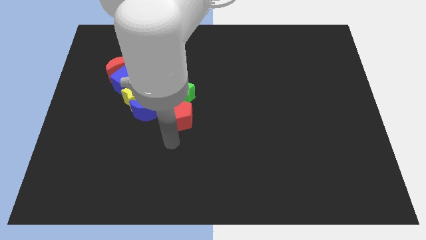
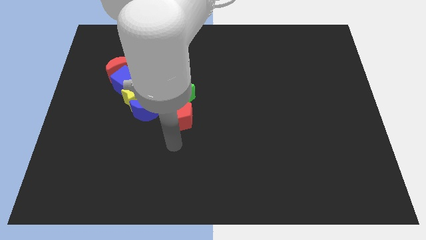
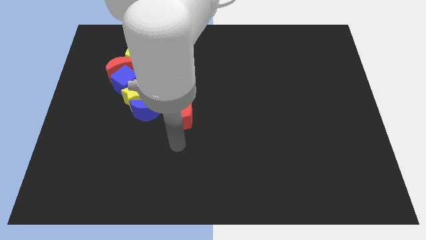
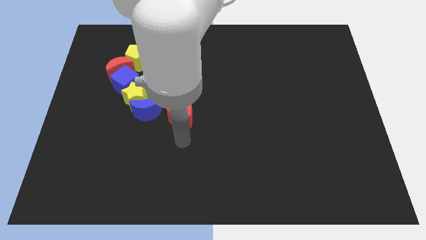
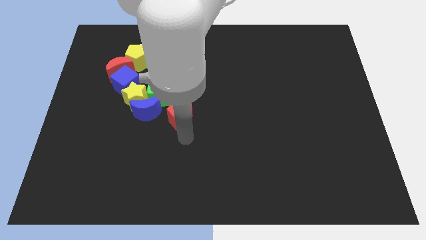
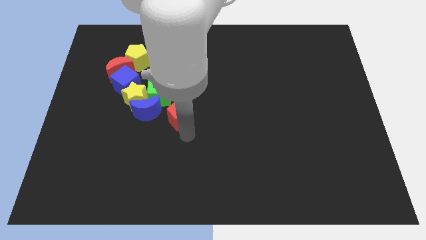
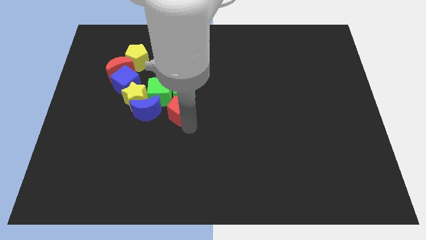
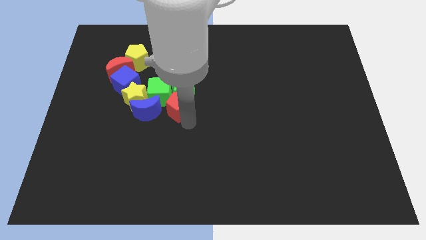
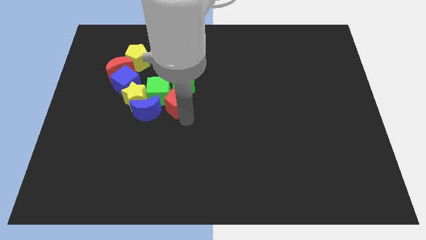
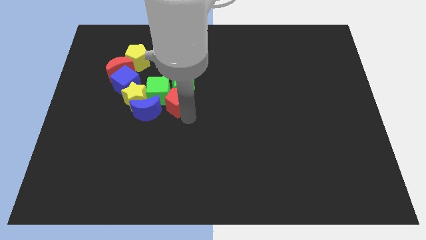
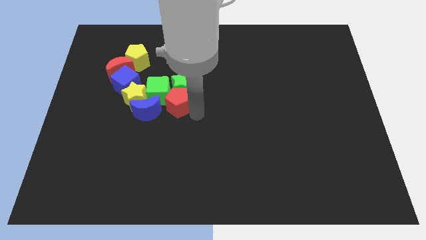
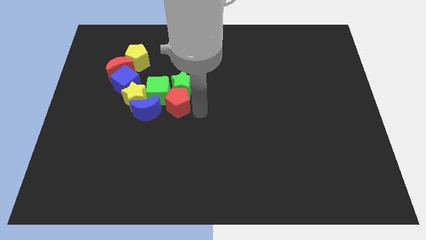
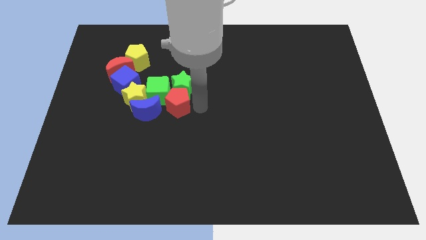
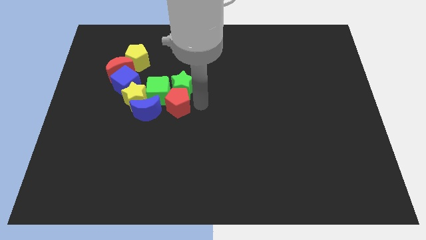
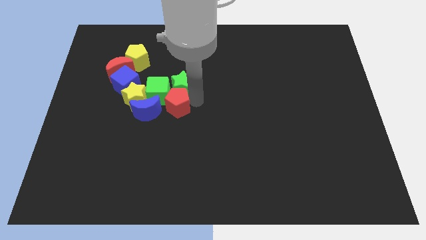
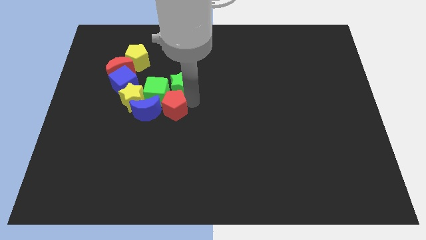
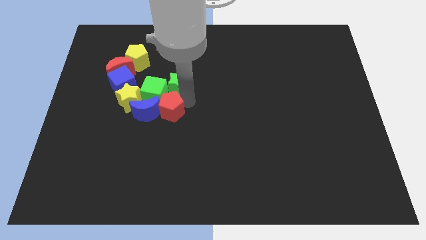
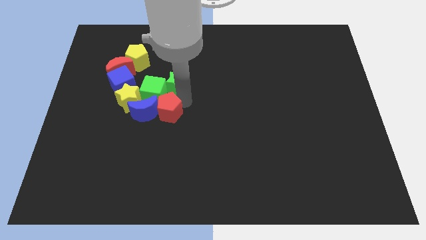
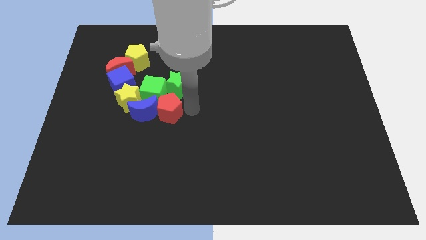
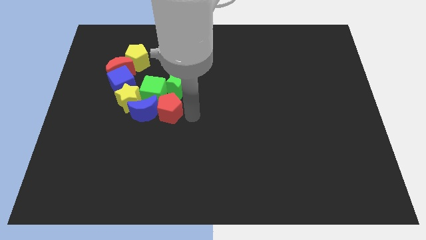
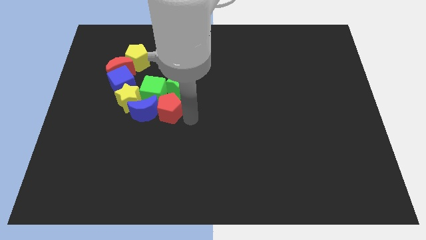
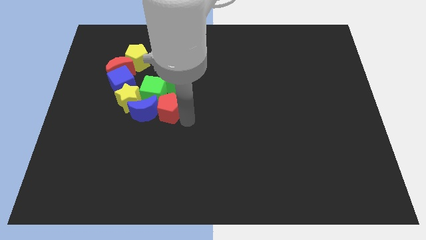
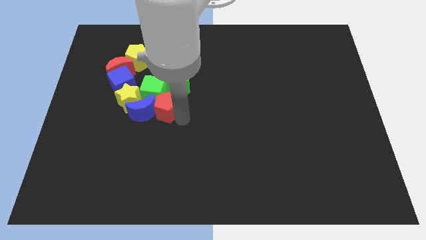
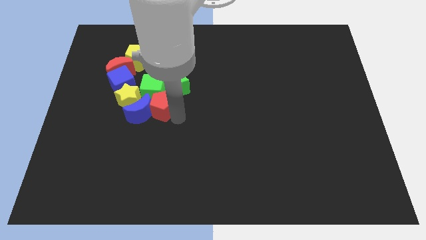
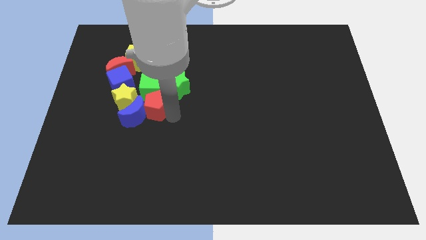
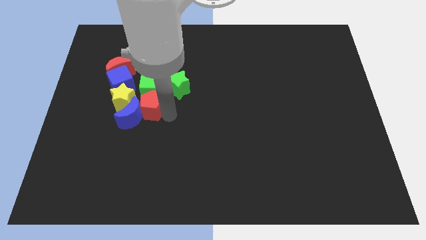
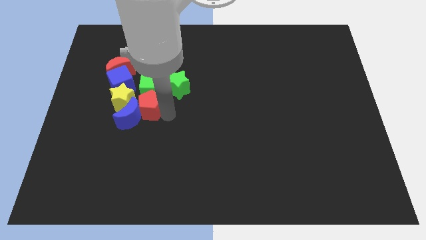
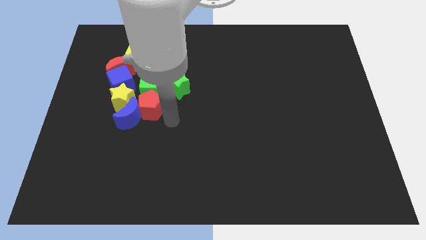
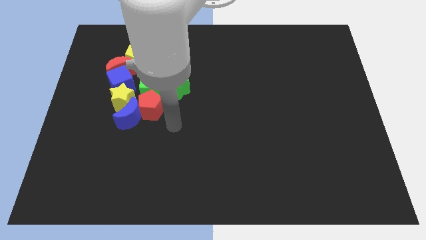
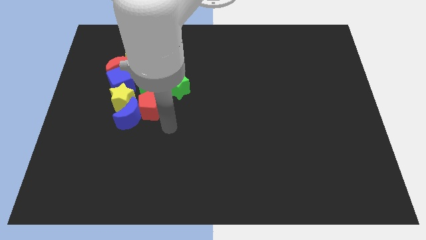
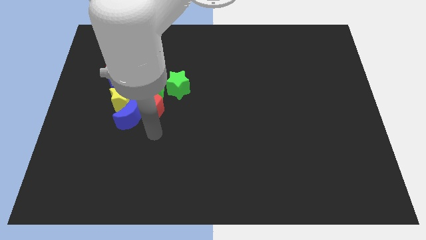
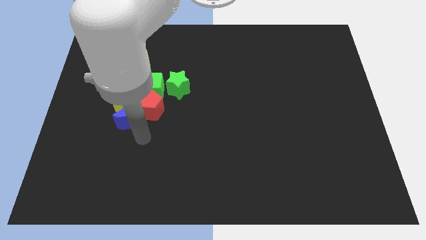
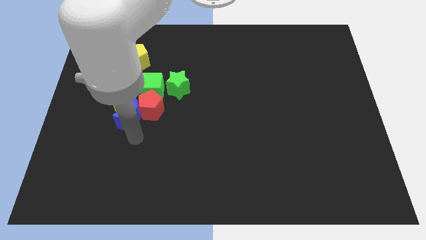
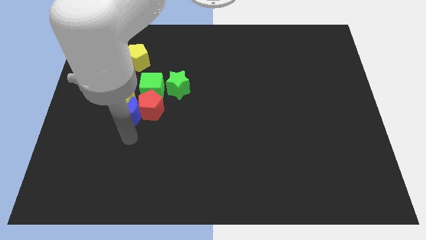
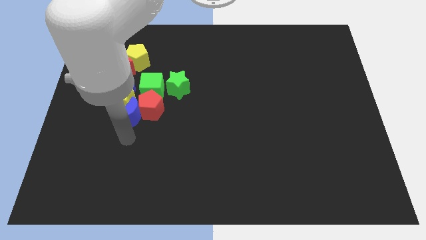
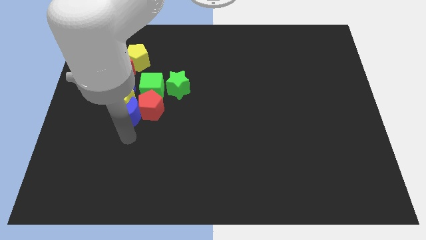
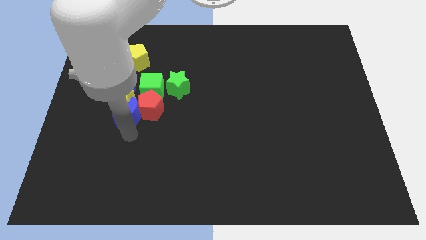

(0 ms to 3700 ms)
move the red pentagon into the blue moon

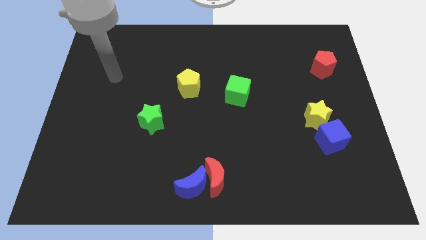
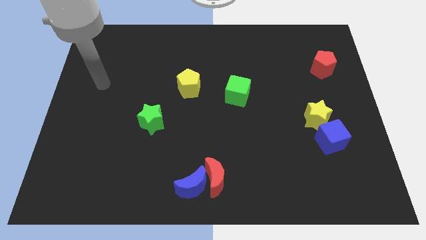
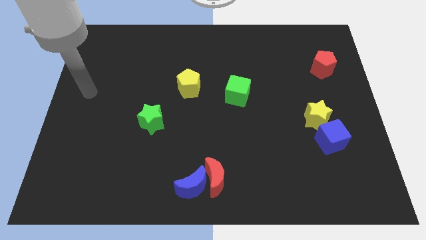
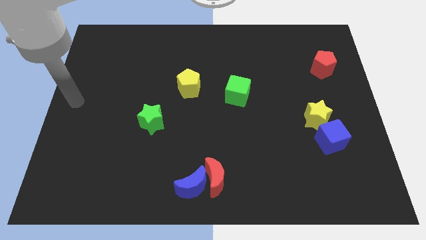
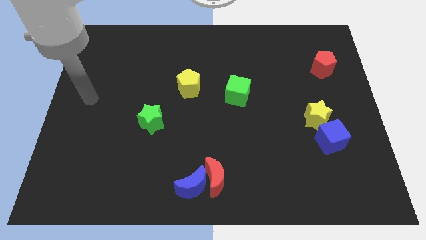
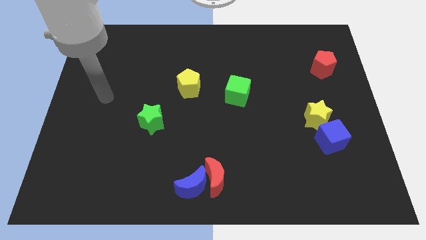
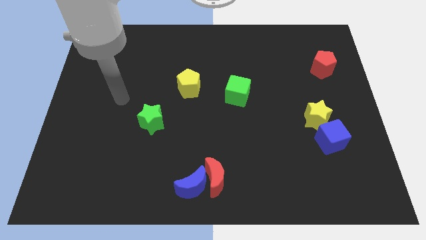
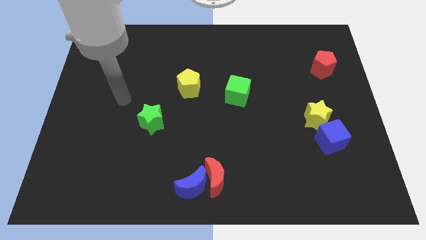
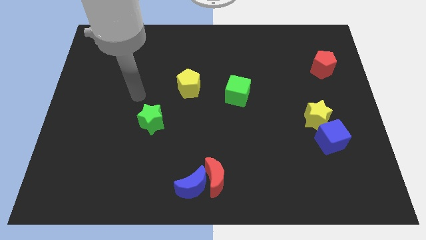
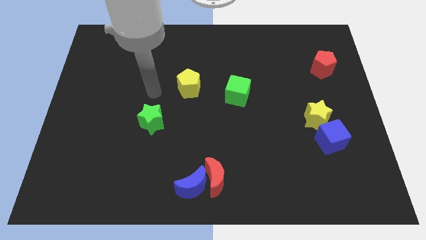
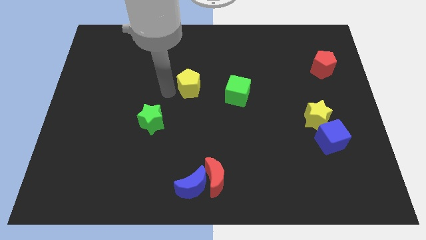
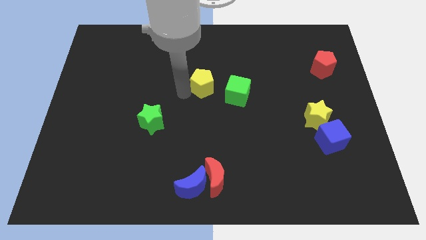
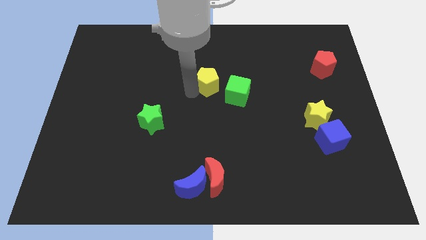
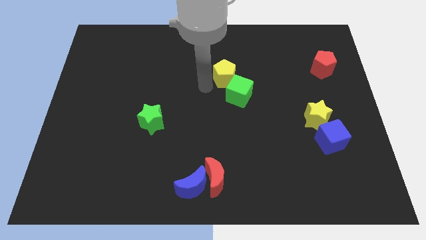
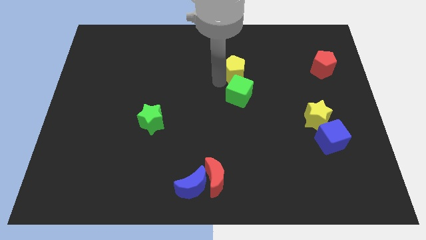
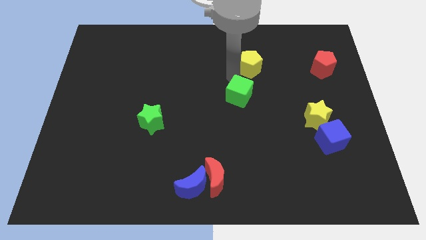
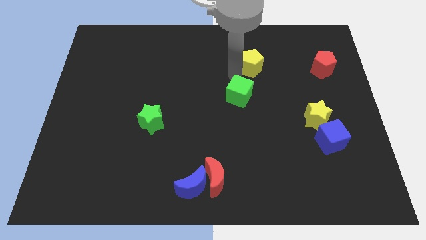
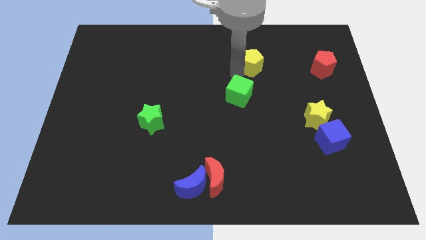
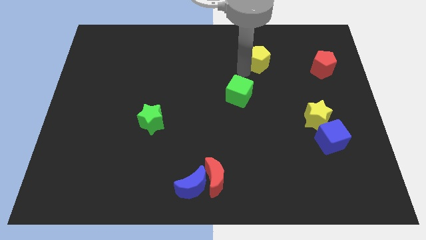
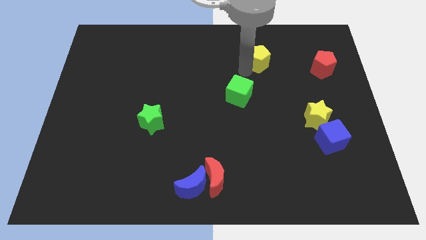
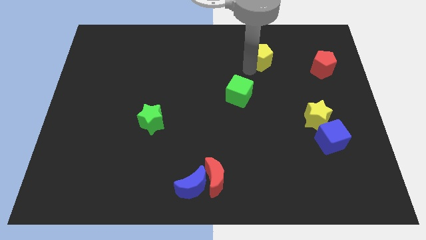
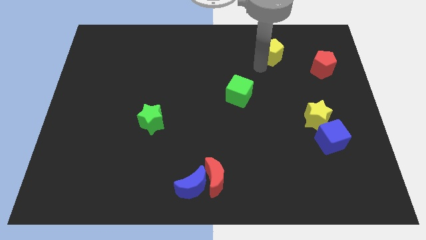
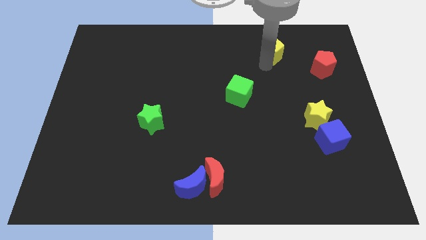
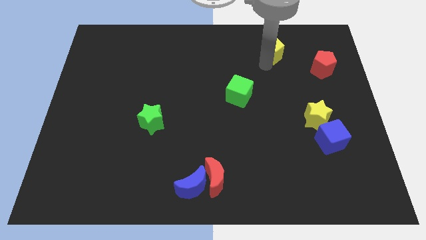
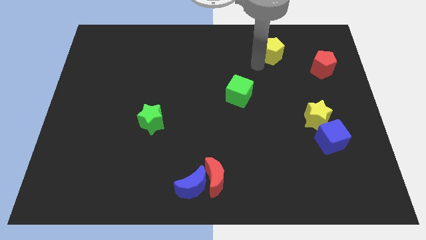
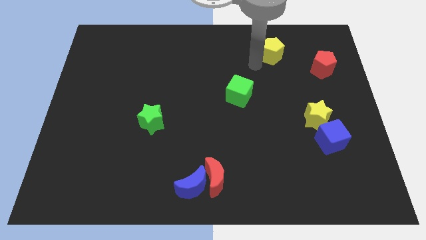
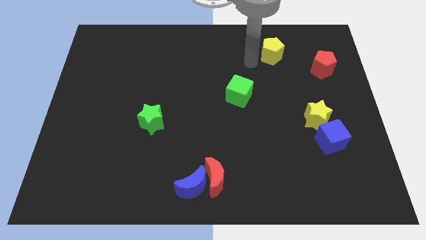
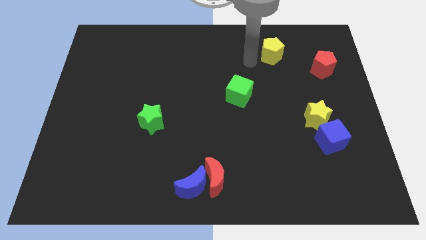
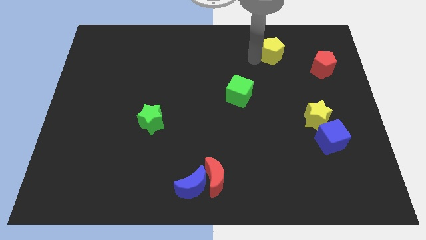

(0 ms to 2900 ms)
push the yellow pentagon towards the top right of the board

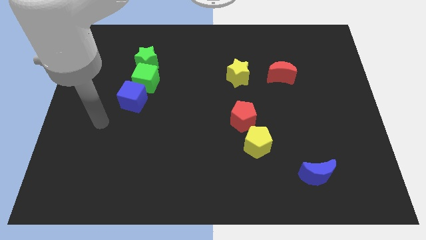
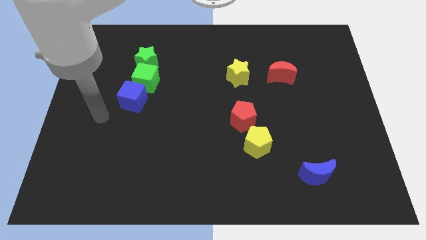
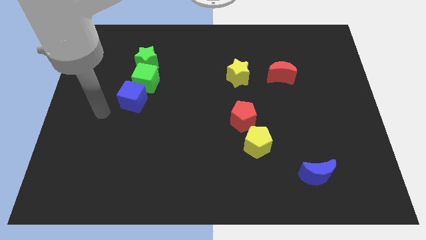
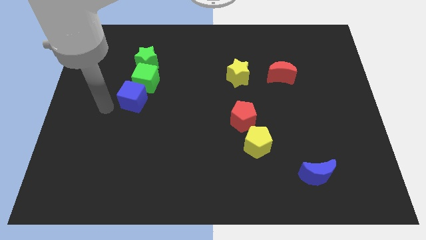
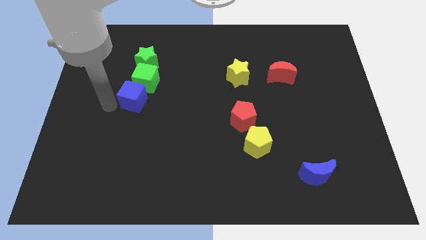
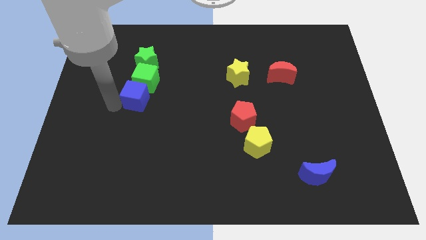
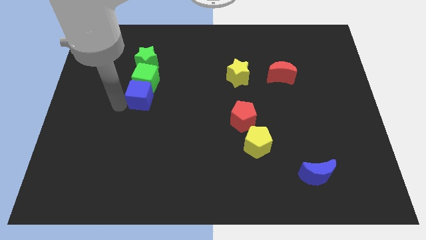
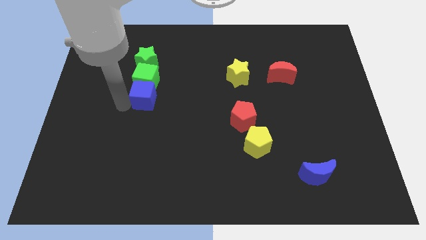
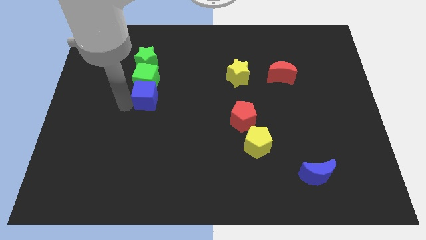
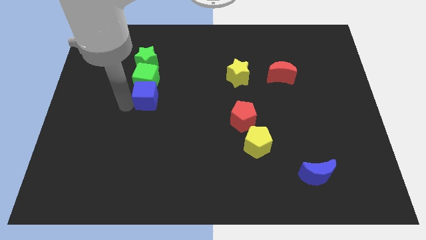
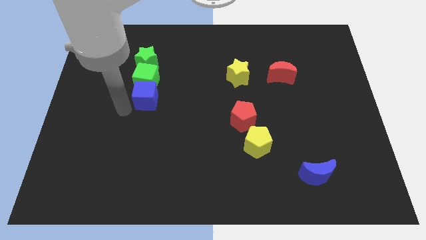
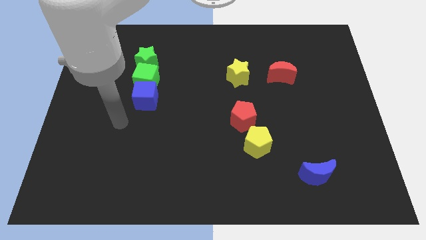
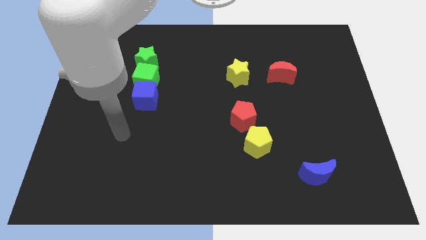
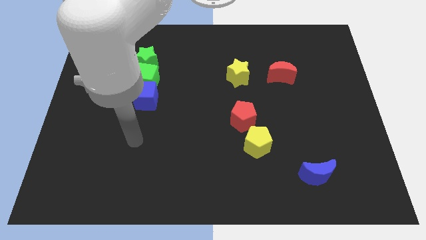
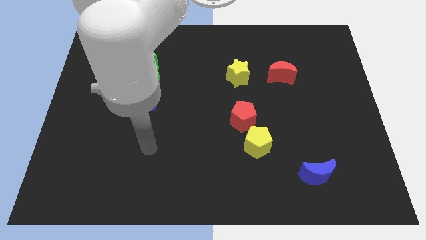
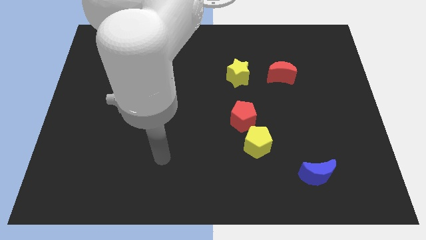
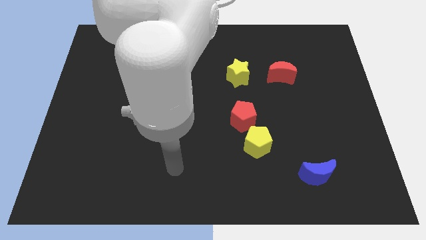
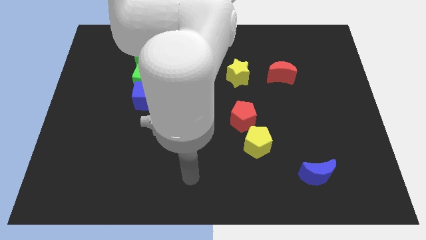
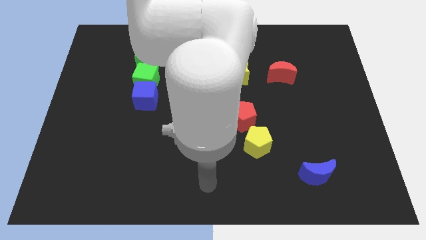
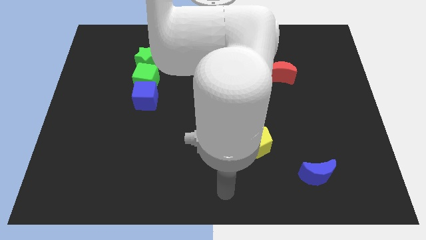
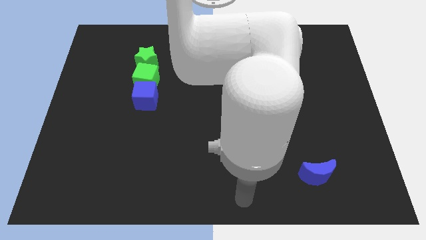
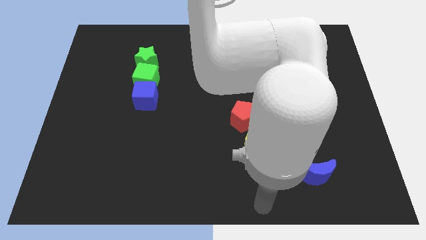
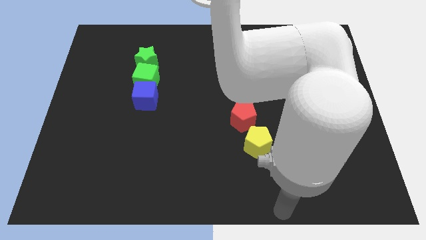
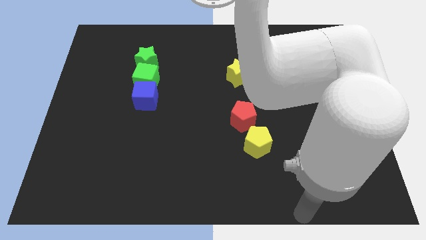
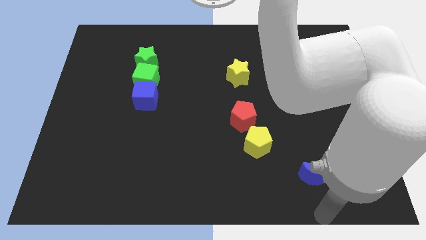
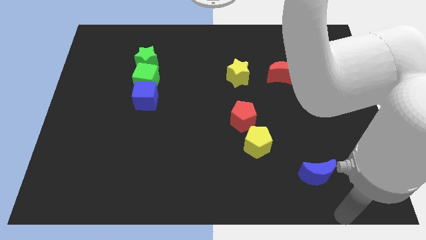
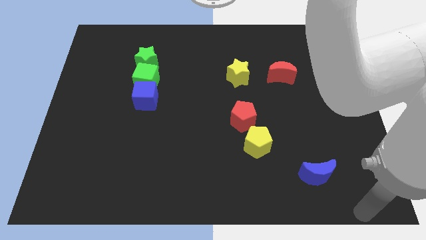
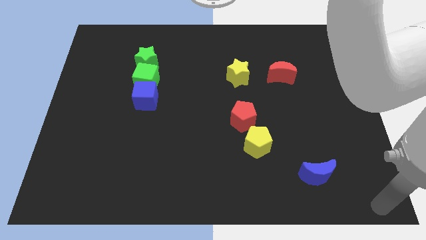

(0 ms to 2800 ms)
adjust the blue cube to the bottom side of the green cube
